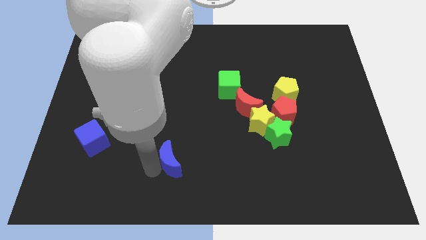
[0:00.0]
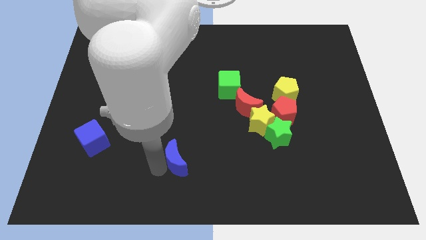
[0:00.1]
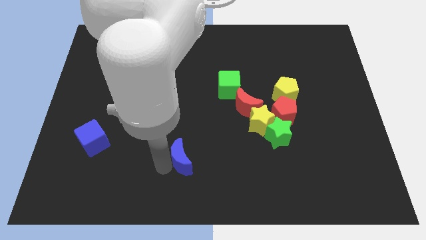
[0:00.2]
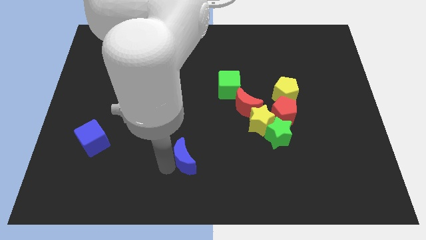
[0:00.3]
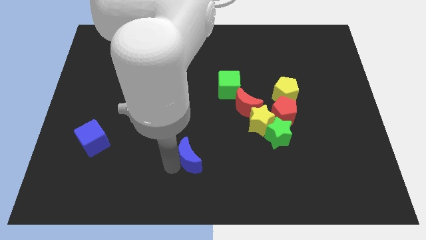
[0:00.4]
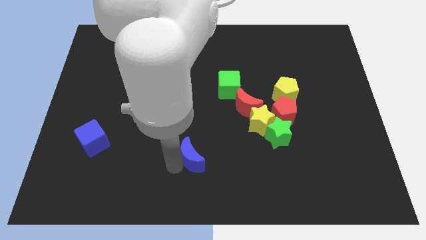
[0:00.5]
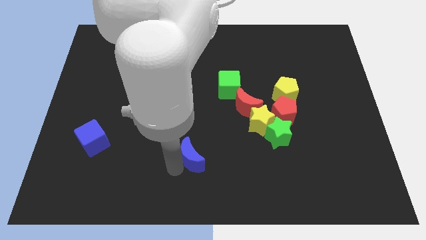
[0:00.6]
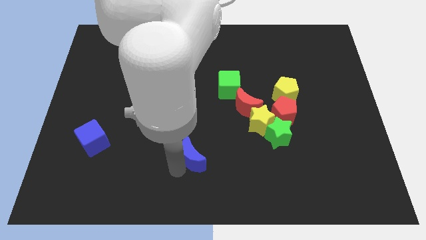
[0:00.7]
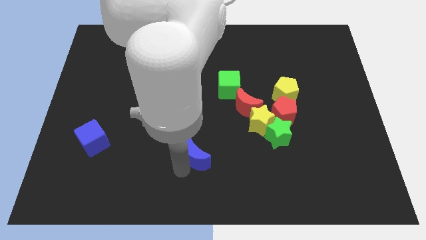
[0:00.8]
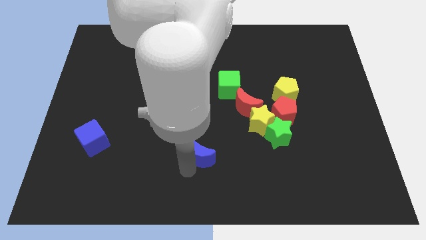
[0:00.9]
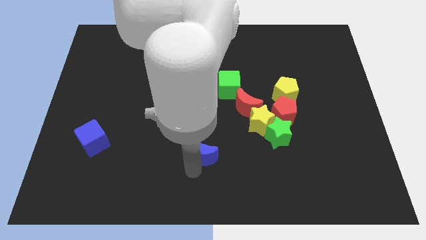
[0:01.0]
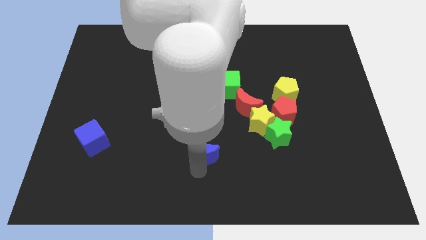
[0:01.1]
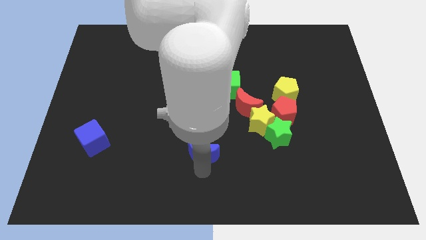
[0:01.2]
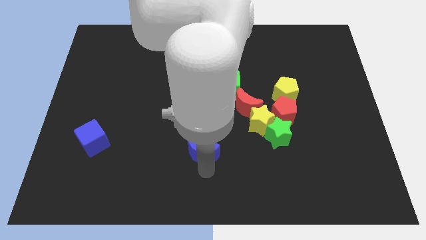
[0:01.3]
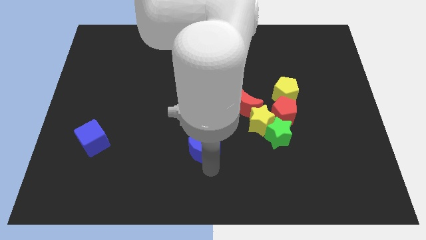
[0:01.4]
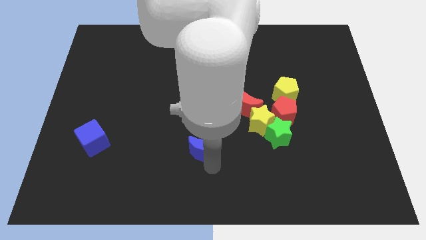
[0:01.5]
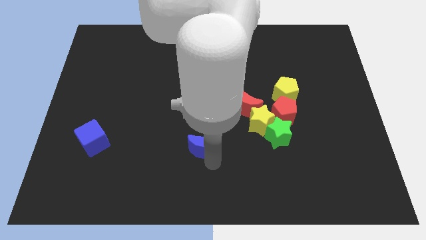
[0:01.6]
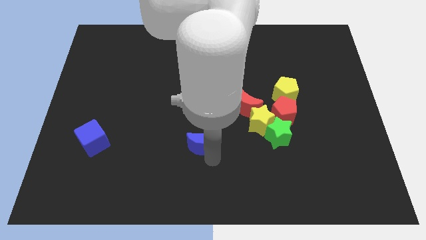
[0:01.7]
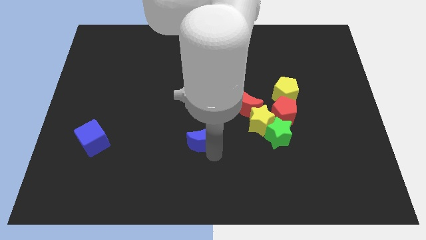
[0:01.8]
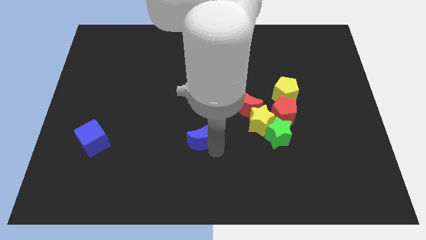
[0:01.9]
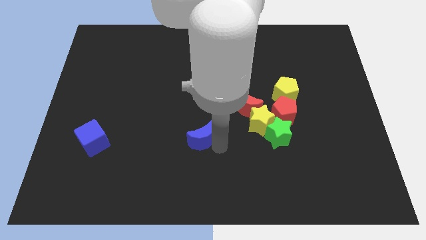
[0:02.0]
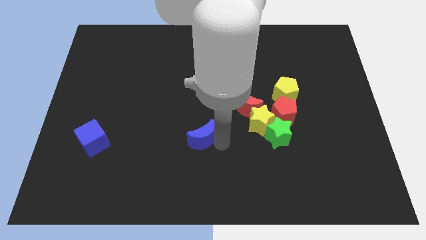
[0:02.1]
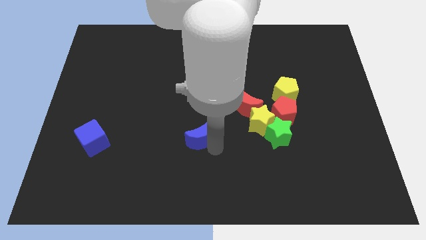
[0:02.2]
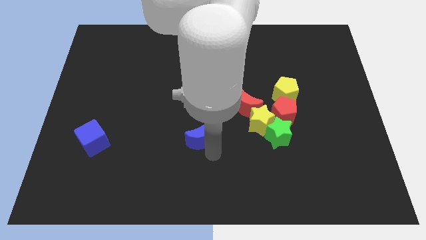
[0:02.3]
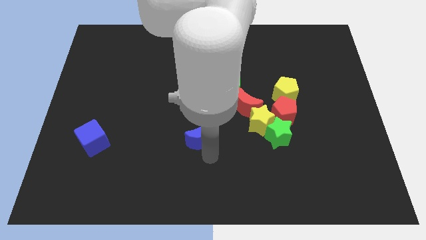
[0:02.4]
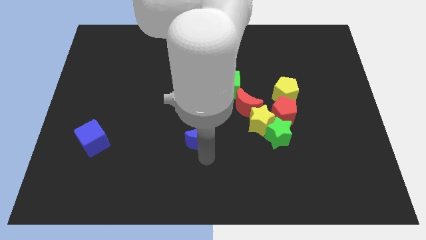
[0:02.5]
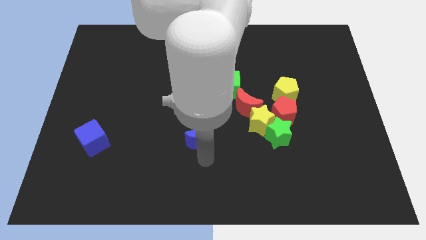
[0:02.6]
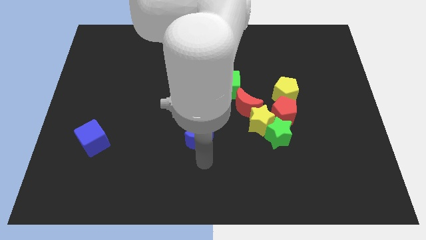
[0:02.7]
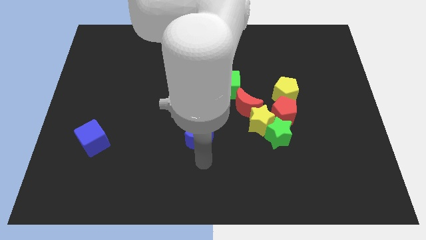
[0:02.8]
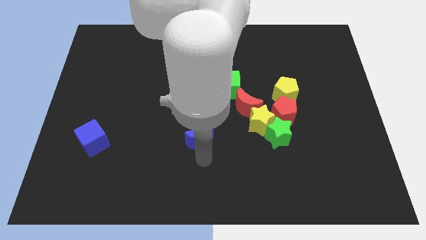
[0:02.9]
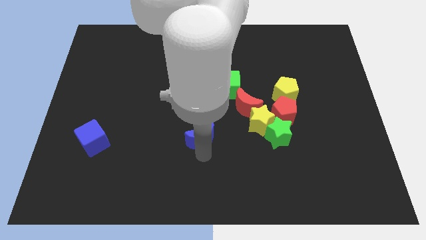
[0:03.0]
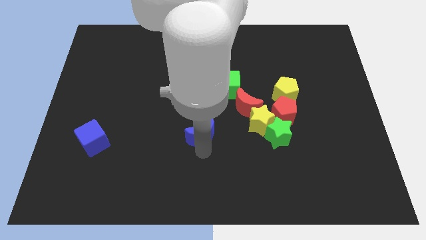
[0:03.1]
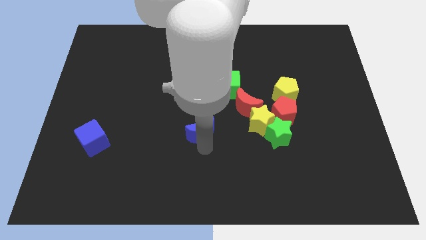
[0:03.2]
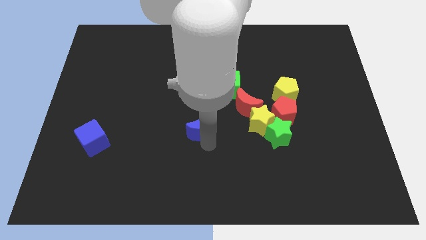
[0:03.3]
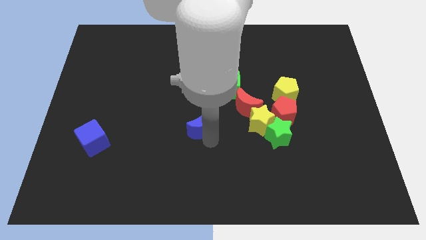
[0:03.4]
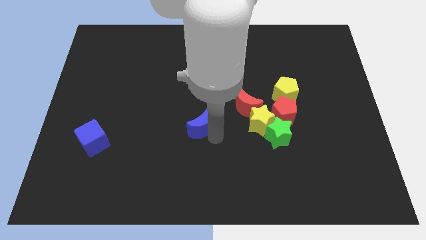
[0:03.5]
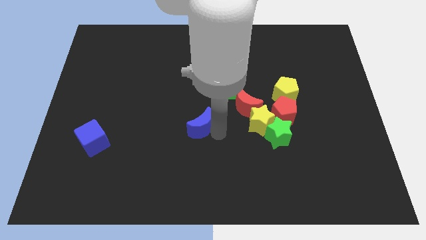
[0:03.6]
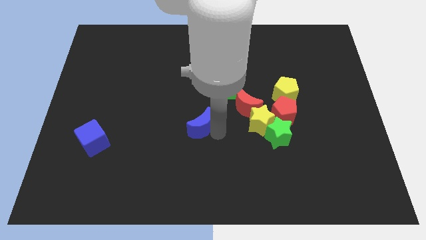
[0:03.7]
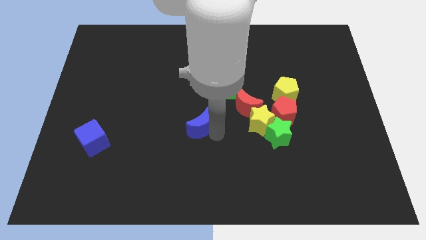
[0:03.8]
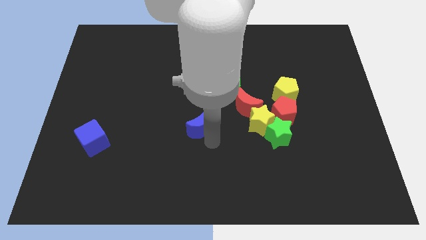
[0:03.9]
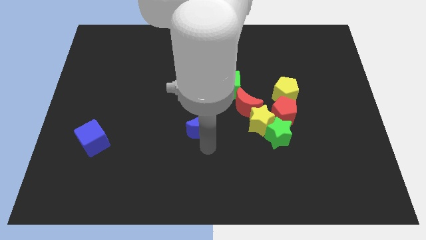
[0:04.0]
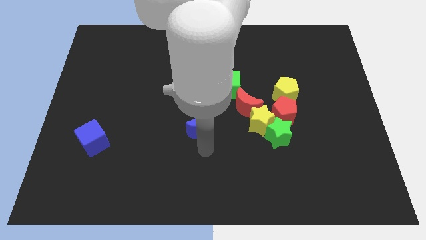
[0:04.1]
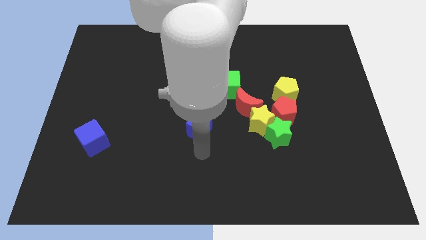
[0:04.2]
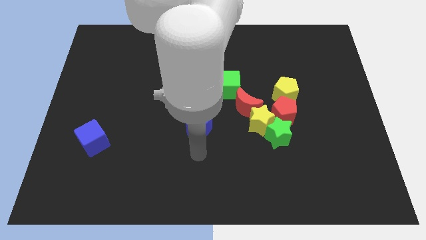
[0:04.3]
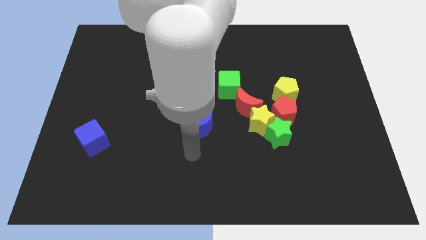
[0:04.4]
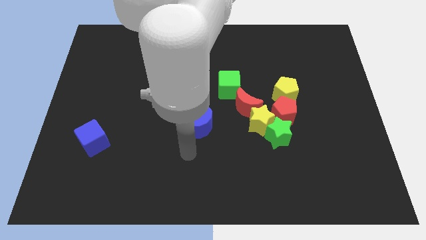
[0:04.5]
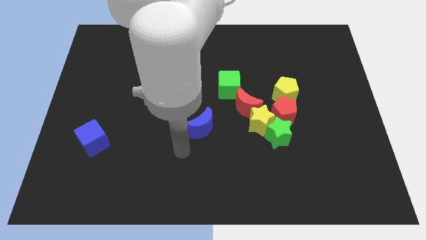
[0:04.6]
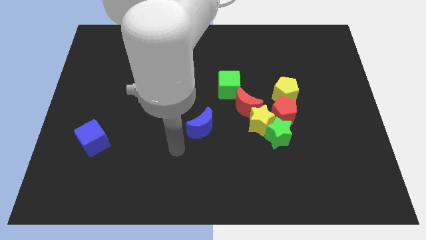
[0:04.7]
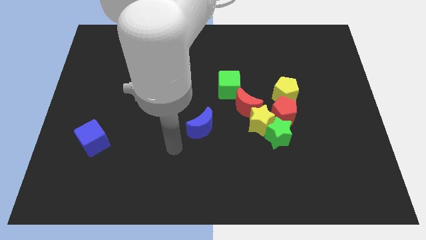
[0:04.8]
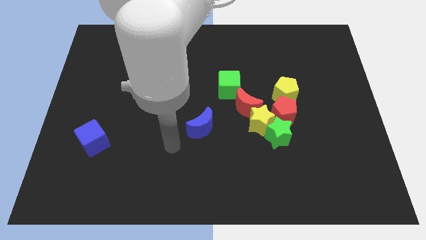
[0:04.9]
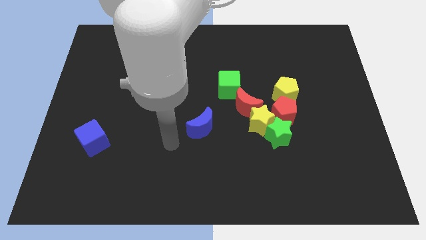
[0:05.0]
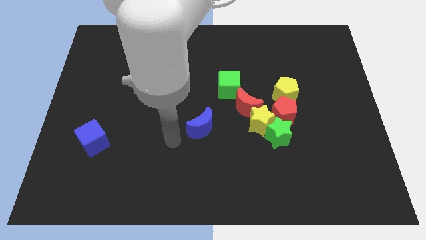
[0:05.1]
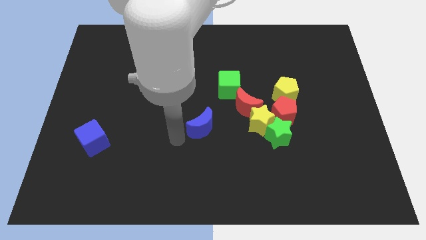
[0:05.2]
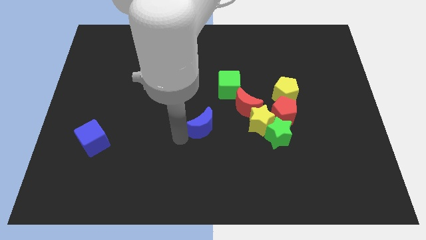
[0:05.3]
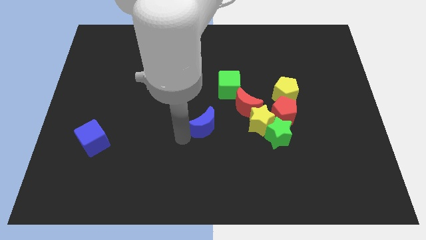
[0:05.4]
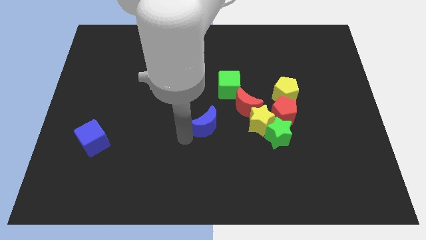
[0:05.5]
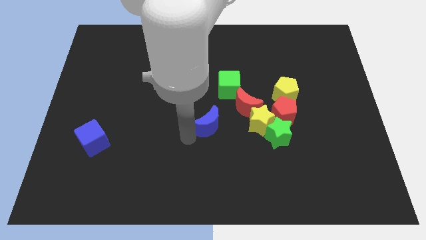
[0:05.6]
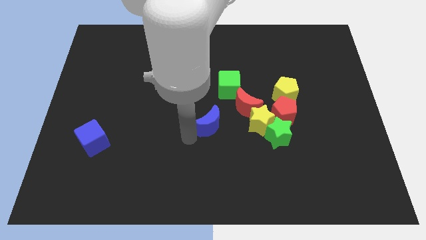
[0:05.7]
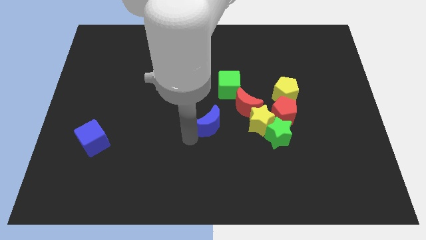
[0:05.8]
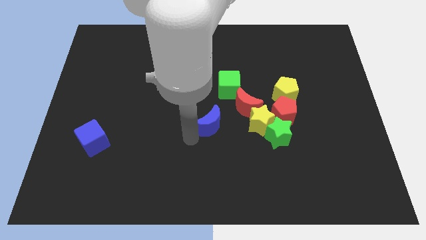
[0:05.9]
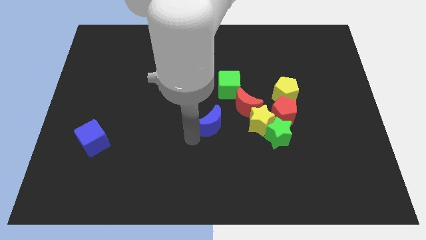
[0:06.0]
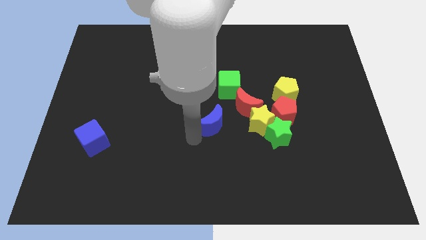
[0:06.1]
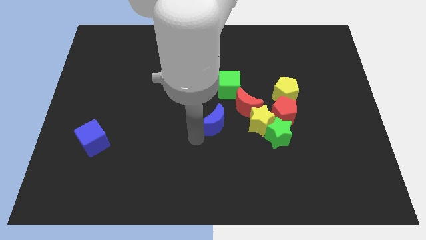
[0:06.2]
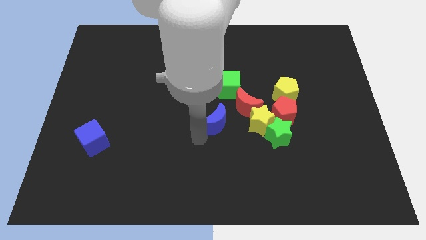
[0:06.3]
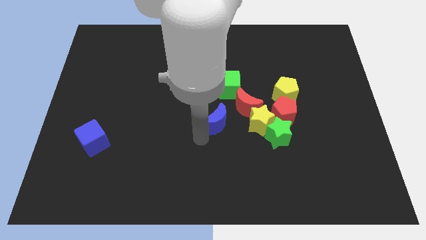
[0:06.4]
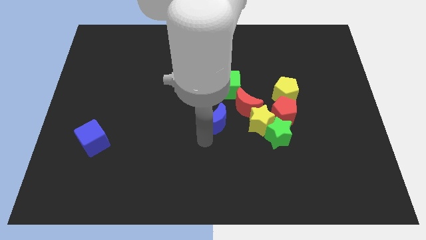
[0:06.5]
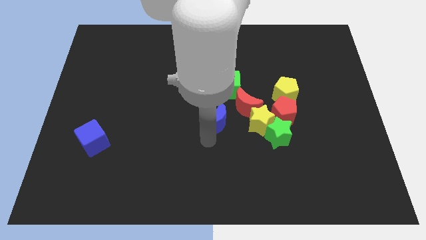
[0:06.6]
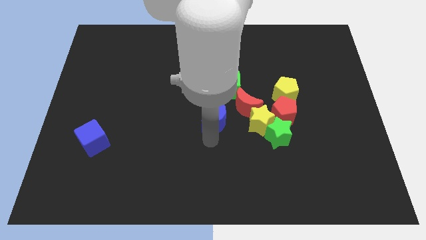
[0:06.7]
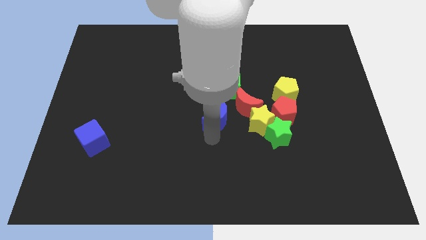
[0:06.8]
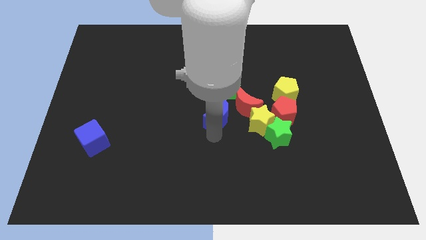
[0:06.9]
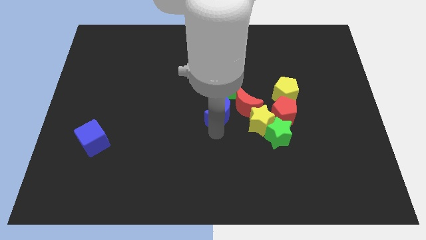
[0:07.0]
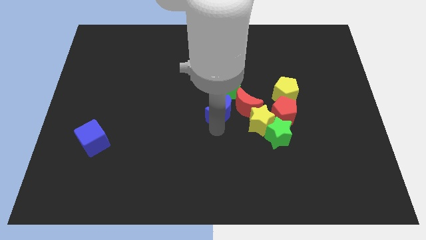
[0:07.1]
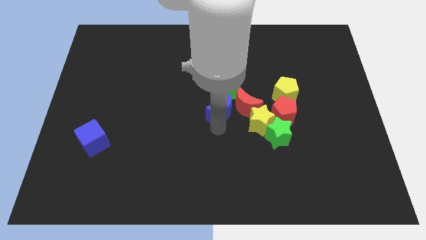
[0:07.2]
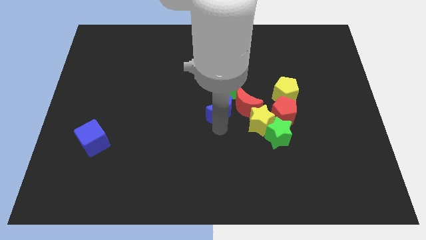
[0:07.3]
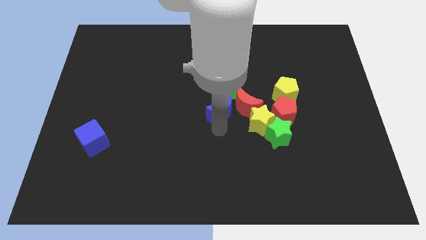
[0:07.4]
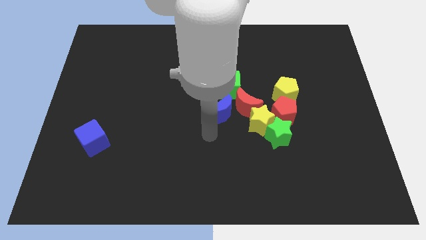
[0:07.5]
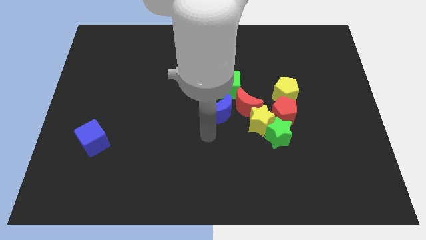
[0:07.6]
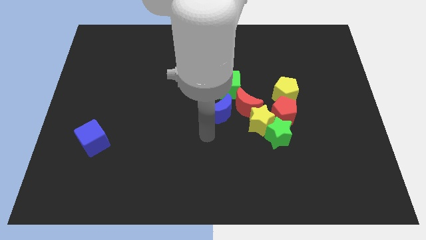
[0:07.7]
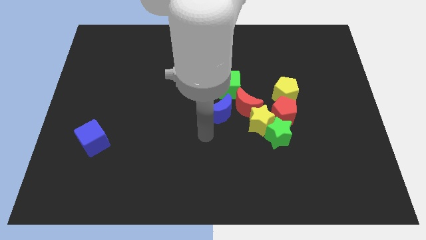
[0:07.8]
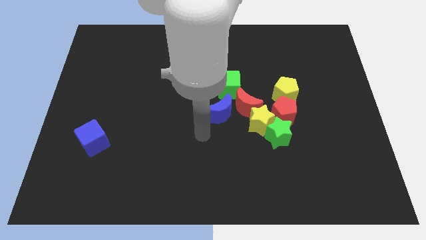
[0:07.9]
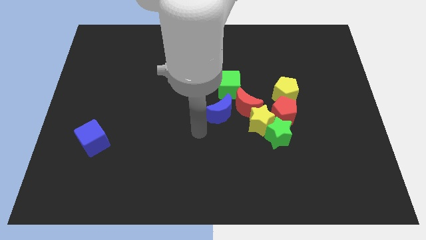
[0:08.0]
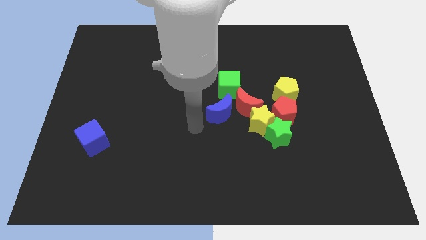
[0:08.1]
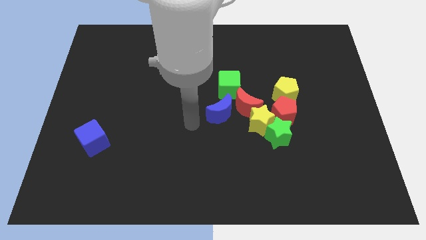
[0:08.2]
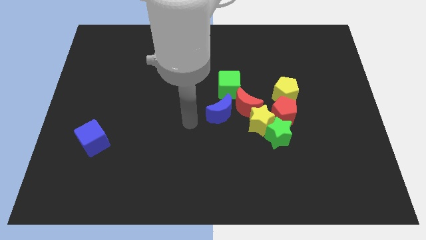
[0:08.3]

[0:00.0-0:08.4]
push the blue crescent towards the center of the board

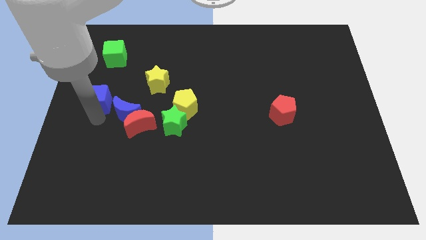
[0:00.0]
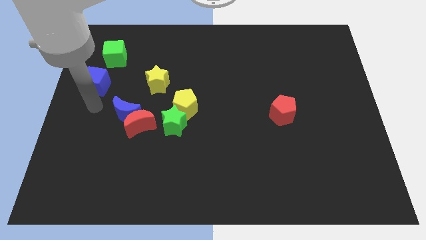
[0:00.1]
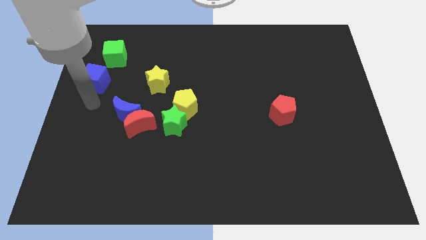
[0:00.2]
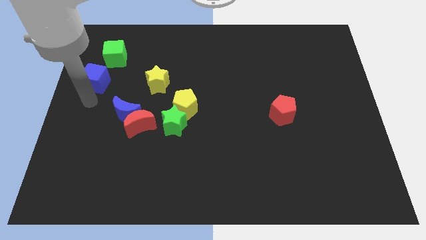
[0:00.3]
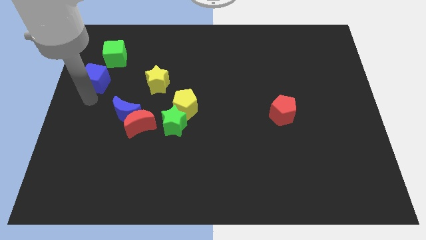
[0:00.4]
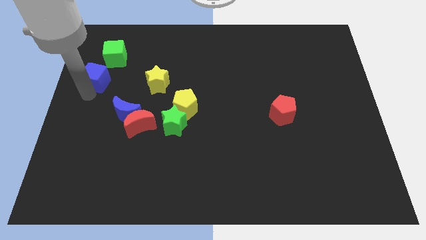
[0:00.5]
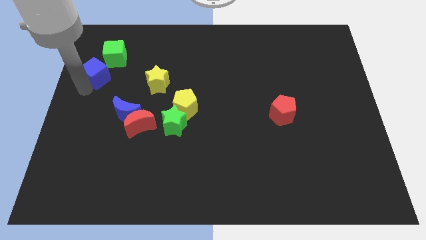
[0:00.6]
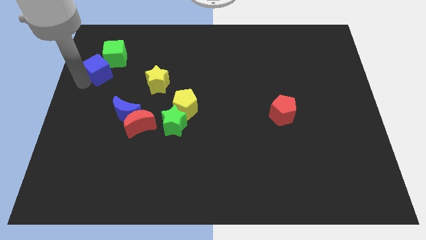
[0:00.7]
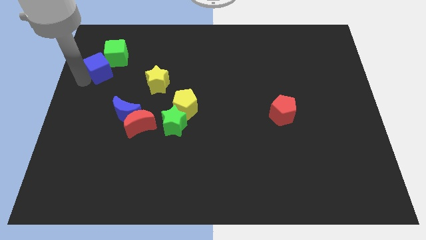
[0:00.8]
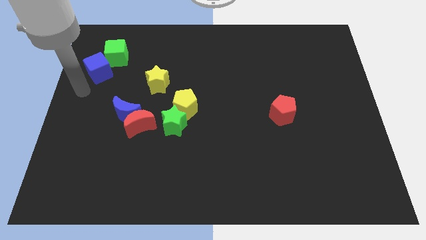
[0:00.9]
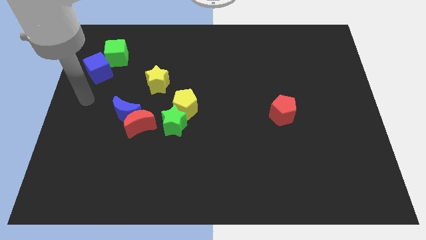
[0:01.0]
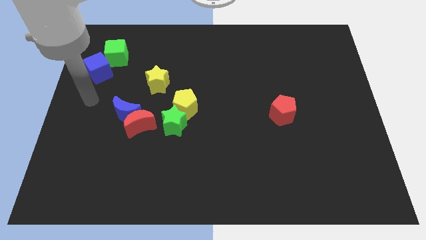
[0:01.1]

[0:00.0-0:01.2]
move blue cube towards the green cube
